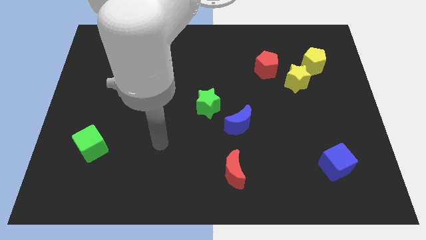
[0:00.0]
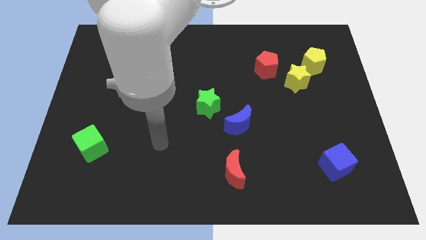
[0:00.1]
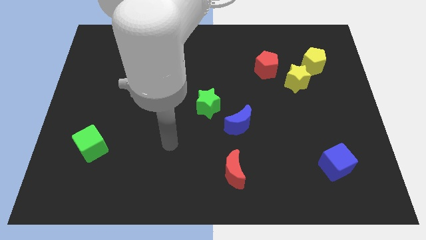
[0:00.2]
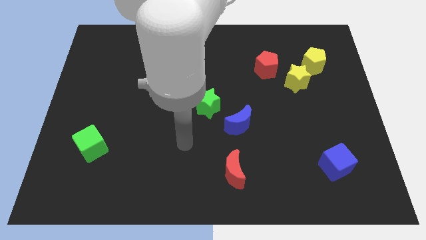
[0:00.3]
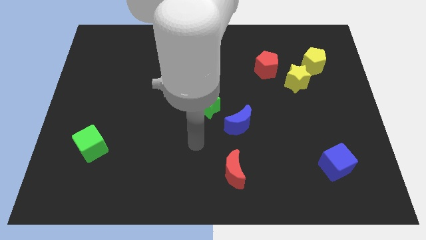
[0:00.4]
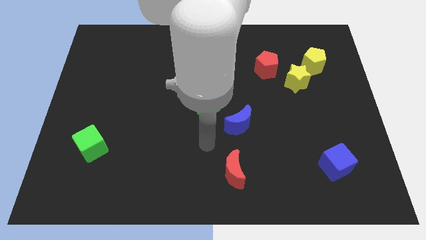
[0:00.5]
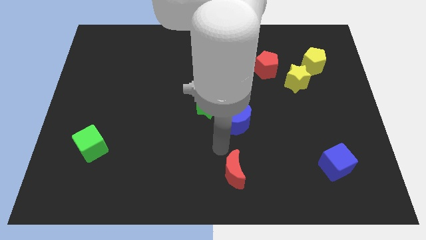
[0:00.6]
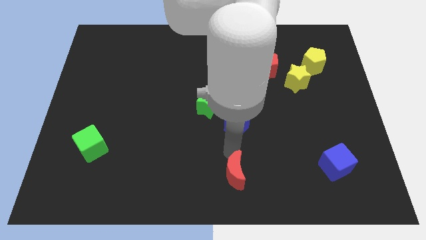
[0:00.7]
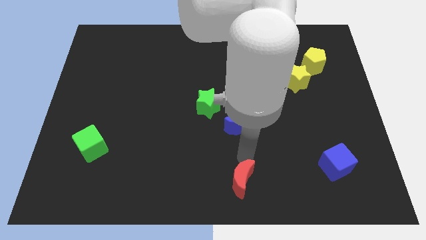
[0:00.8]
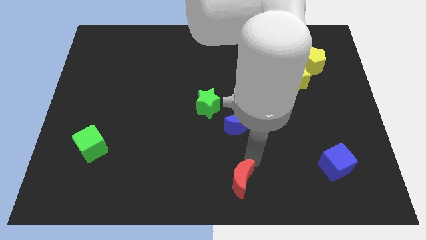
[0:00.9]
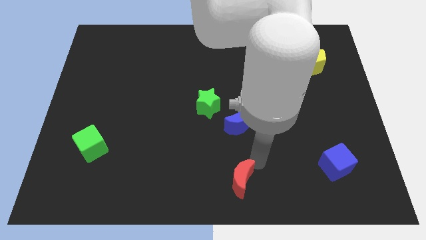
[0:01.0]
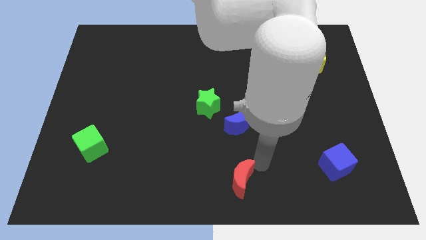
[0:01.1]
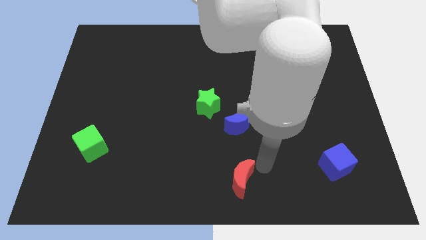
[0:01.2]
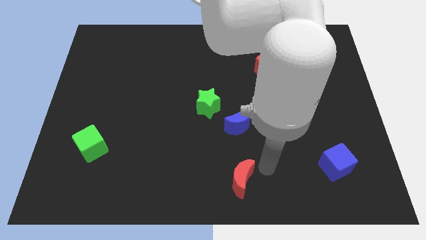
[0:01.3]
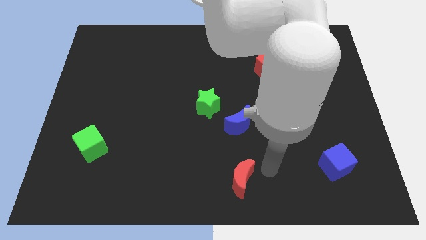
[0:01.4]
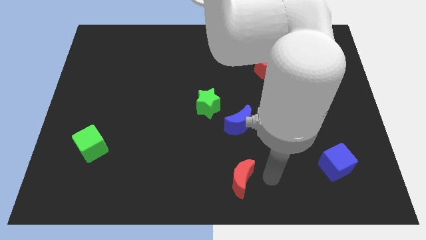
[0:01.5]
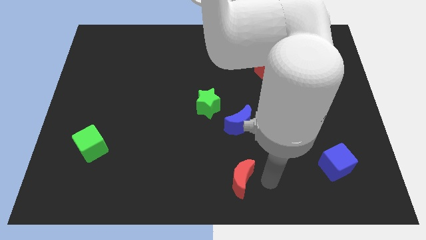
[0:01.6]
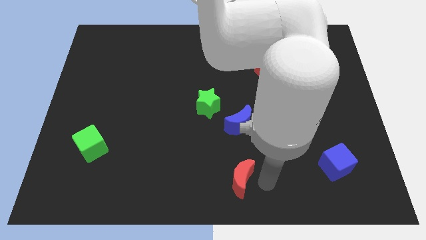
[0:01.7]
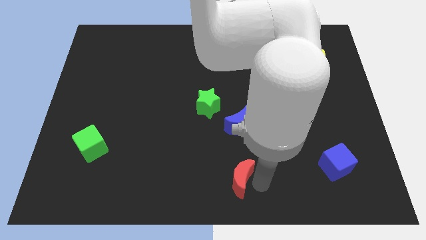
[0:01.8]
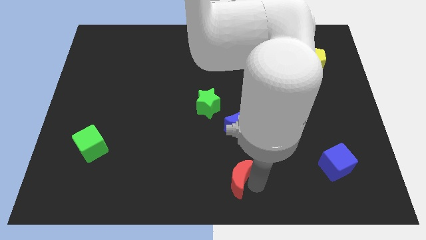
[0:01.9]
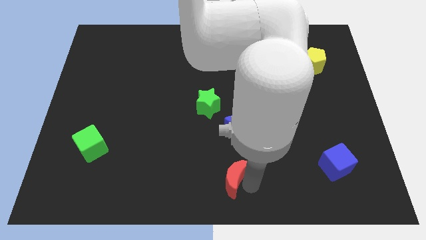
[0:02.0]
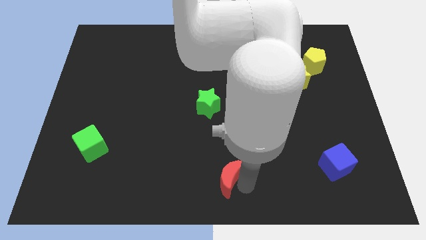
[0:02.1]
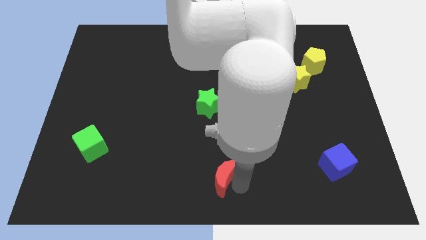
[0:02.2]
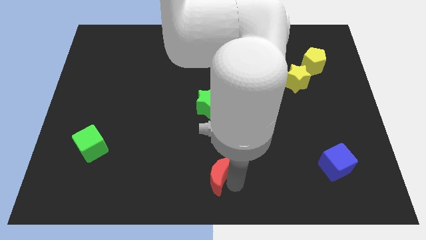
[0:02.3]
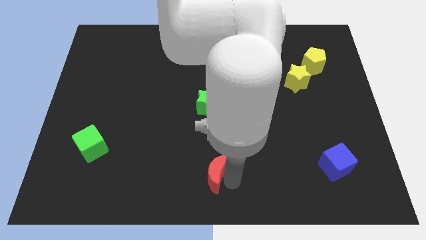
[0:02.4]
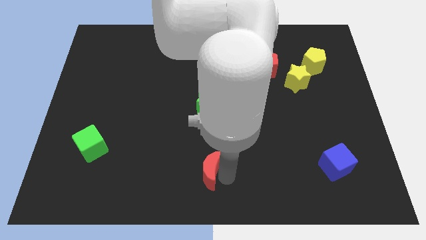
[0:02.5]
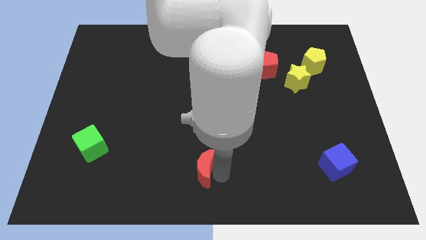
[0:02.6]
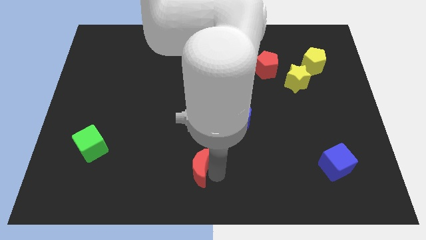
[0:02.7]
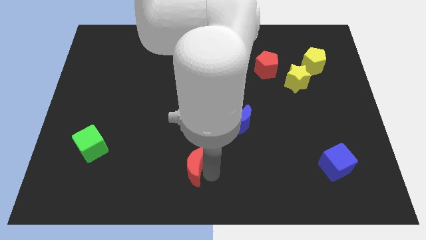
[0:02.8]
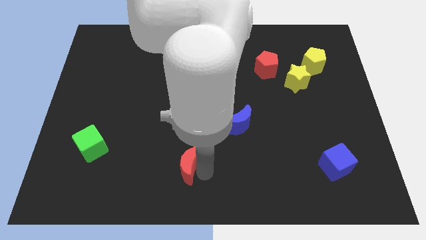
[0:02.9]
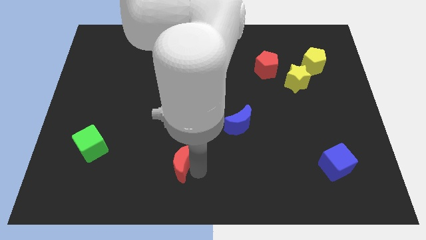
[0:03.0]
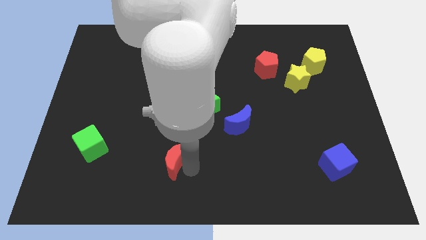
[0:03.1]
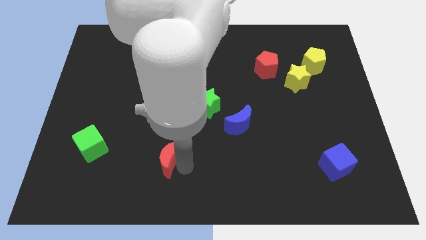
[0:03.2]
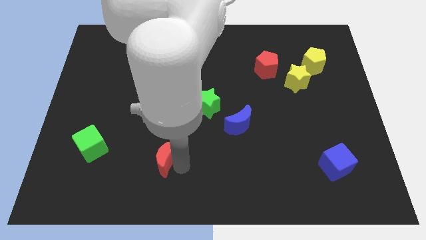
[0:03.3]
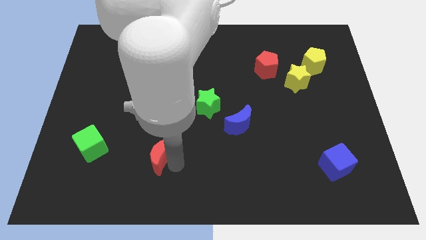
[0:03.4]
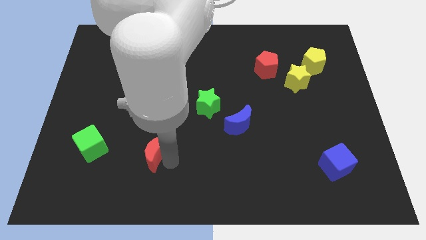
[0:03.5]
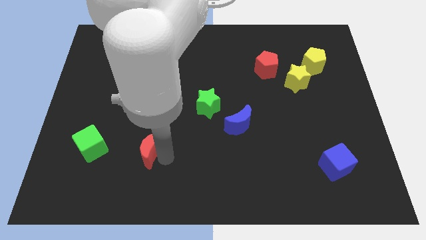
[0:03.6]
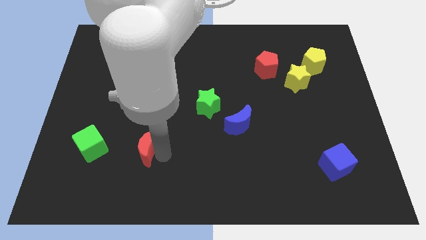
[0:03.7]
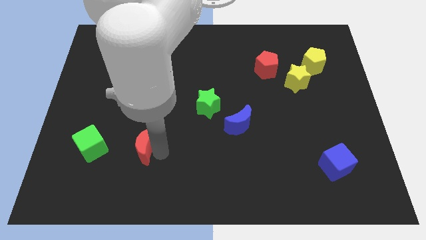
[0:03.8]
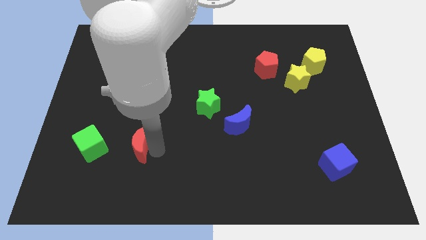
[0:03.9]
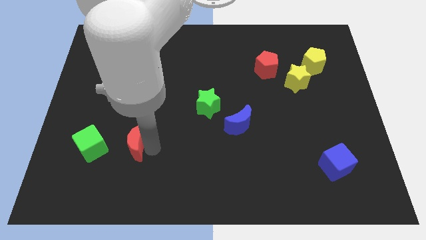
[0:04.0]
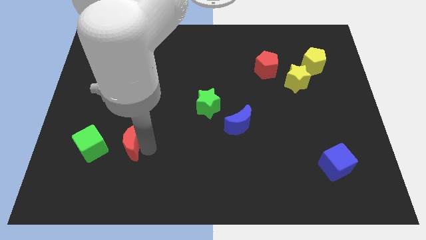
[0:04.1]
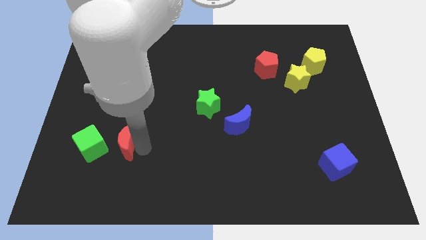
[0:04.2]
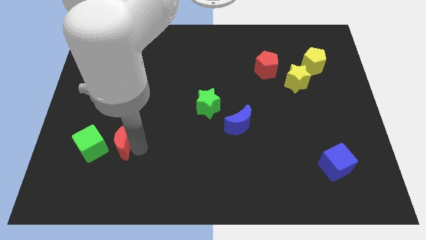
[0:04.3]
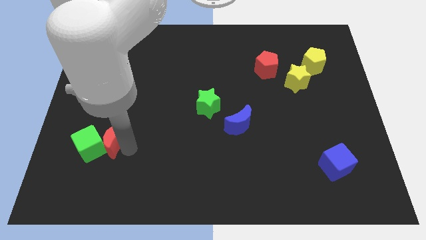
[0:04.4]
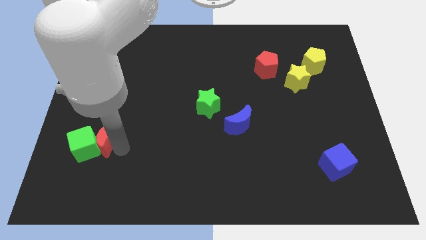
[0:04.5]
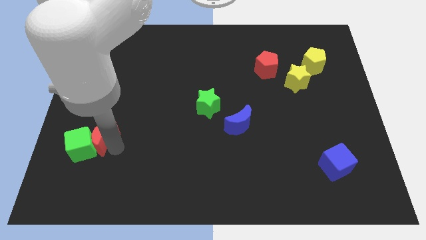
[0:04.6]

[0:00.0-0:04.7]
slide the red moon to the green cube

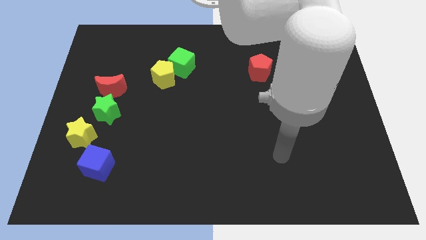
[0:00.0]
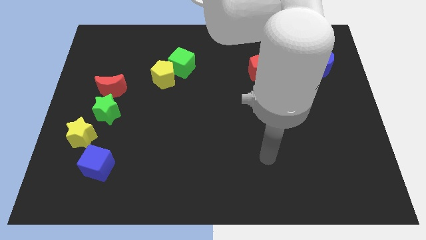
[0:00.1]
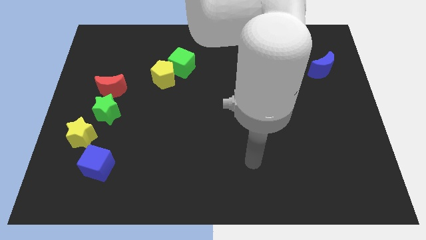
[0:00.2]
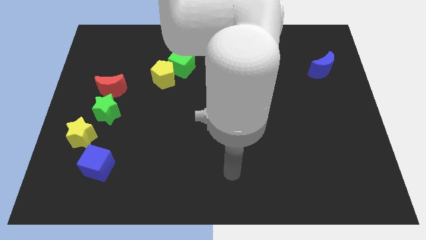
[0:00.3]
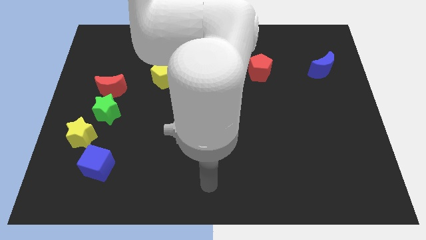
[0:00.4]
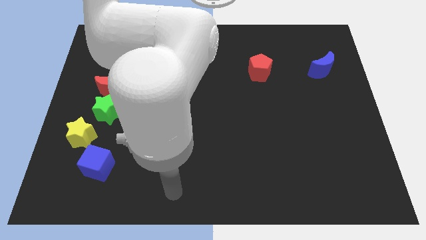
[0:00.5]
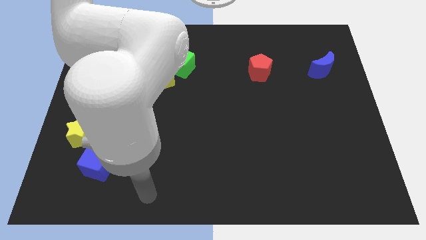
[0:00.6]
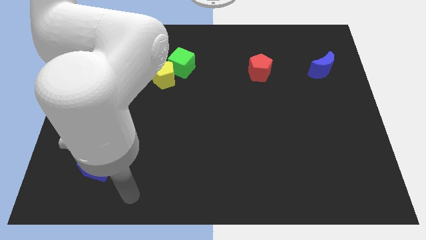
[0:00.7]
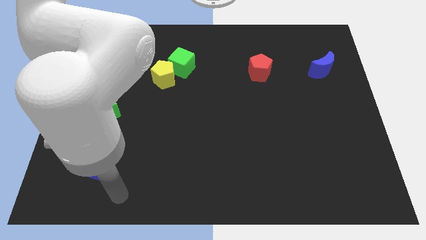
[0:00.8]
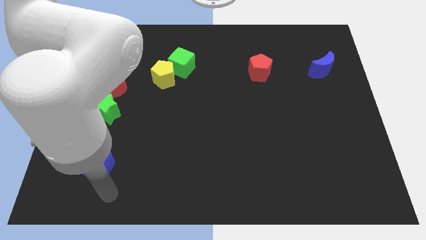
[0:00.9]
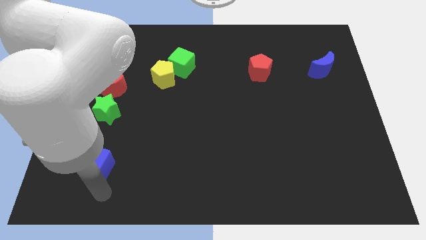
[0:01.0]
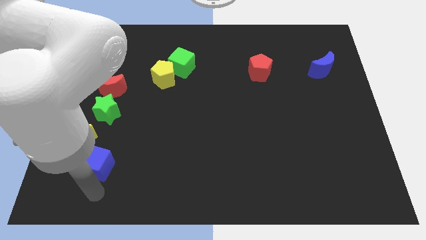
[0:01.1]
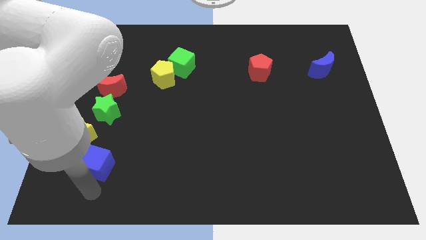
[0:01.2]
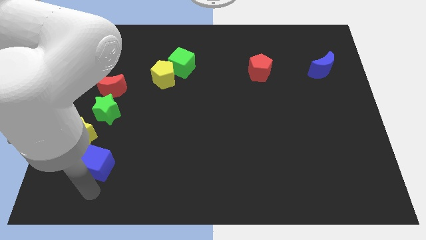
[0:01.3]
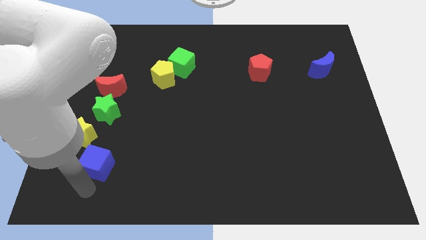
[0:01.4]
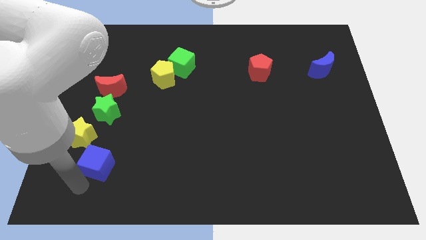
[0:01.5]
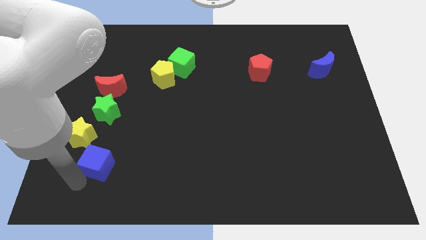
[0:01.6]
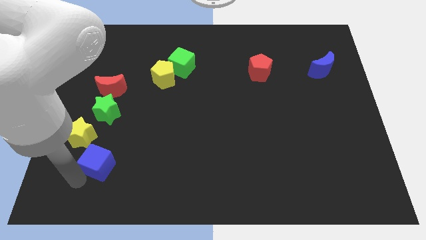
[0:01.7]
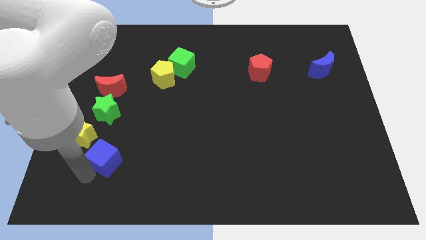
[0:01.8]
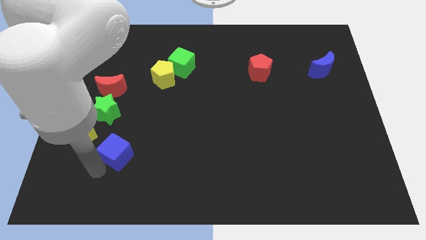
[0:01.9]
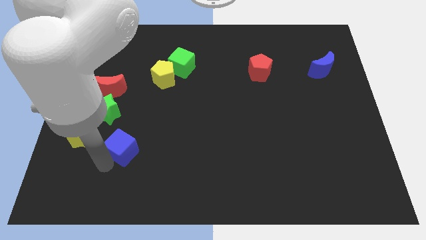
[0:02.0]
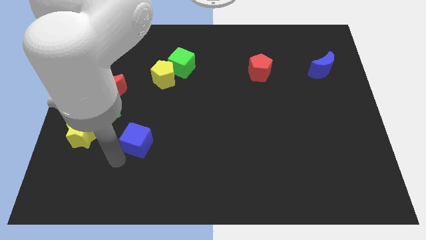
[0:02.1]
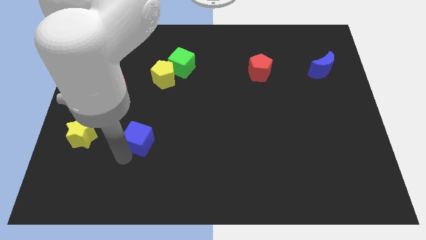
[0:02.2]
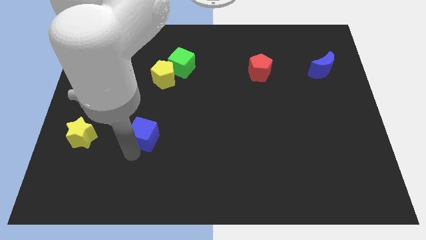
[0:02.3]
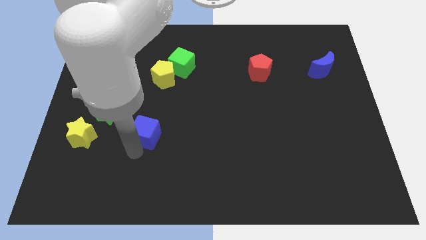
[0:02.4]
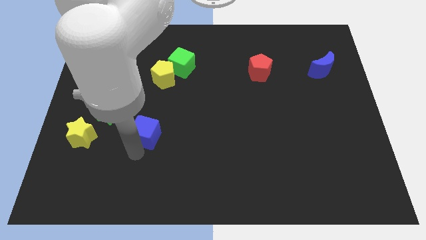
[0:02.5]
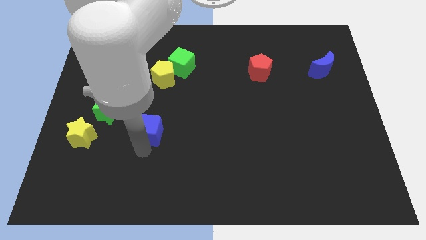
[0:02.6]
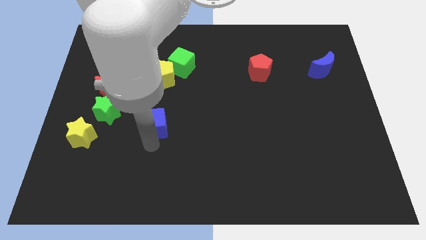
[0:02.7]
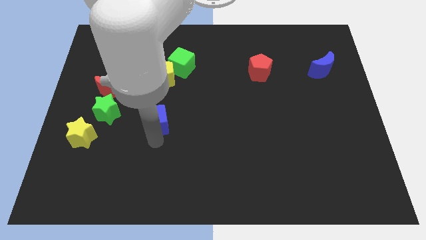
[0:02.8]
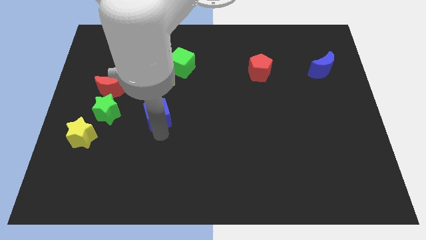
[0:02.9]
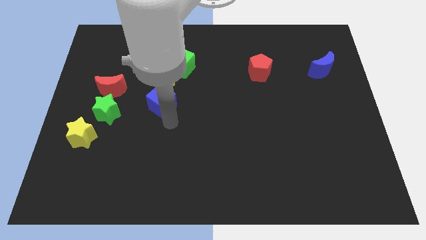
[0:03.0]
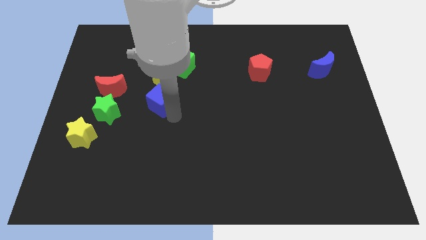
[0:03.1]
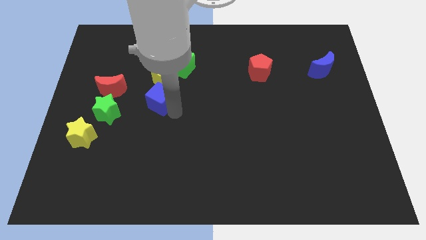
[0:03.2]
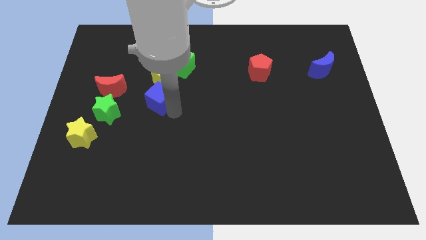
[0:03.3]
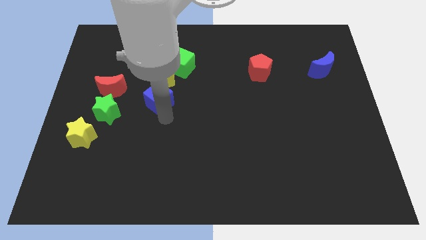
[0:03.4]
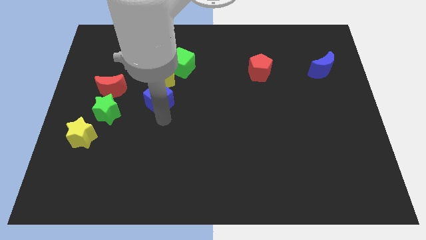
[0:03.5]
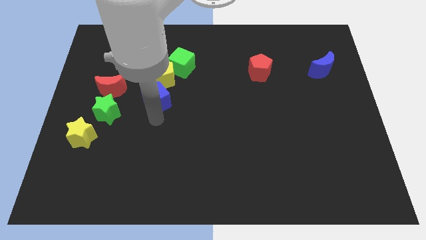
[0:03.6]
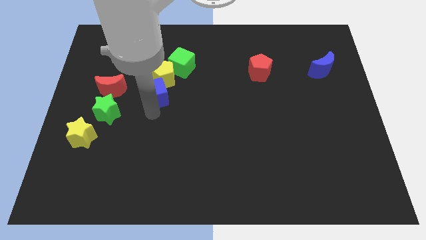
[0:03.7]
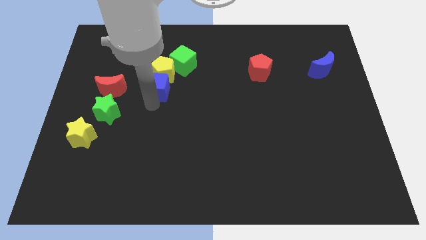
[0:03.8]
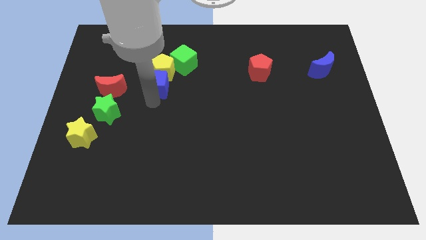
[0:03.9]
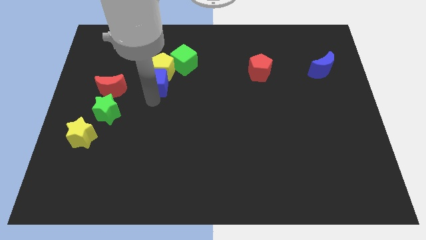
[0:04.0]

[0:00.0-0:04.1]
move the blue cube to the yellow pentagon
